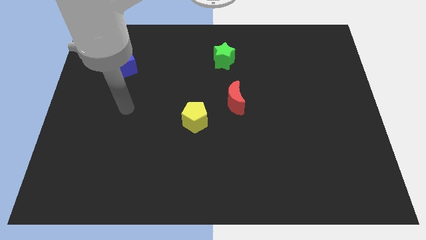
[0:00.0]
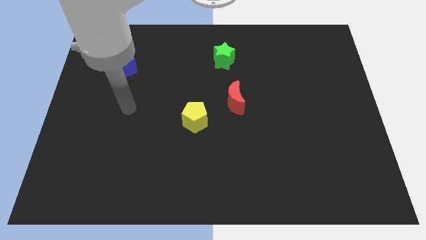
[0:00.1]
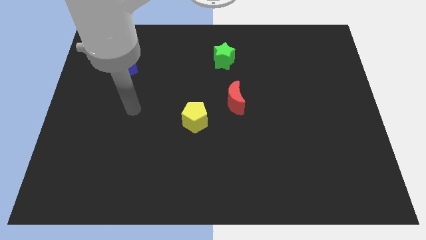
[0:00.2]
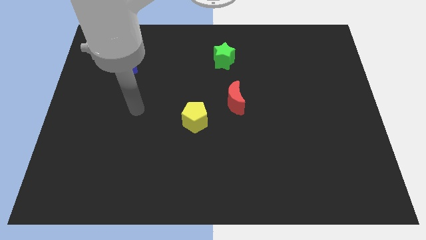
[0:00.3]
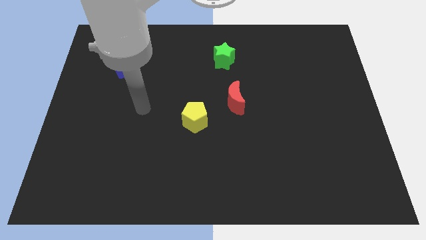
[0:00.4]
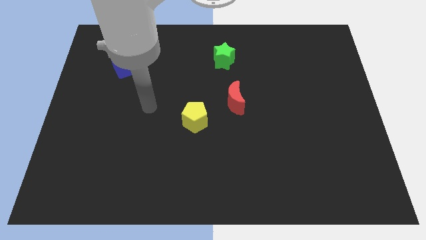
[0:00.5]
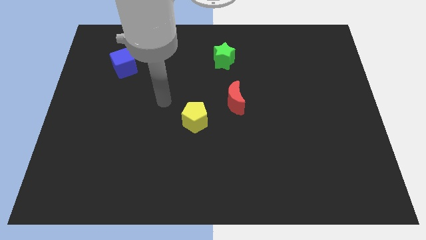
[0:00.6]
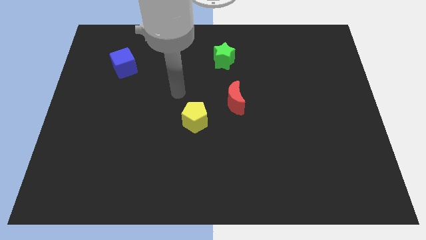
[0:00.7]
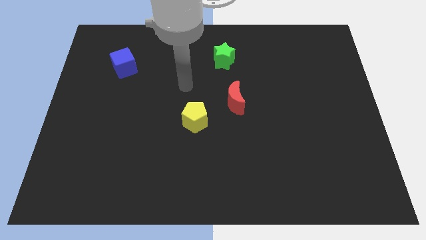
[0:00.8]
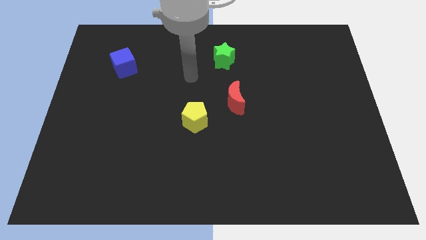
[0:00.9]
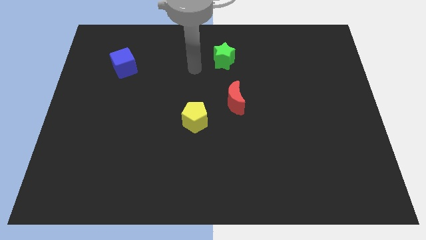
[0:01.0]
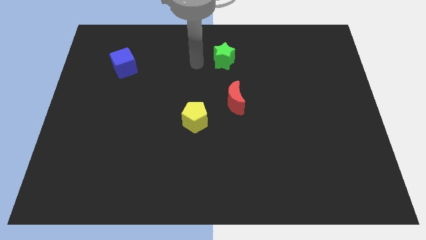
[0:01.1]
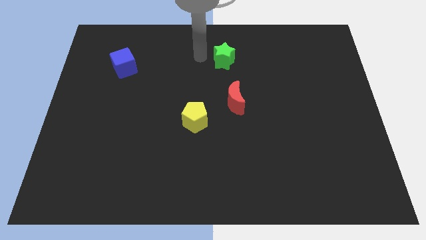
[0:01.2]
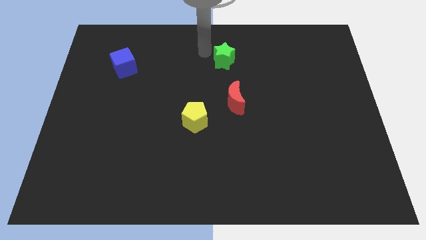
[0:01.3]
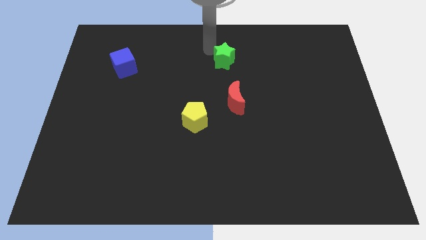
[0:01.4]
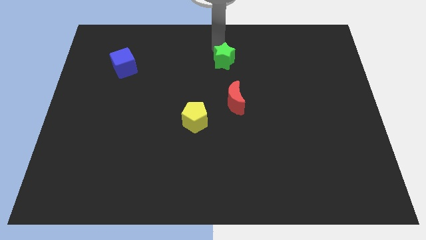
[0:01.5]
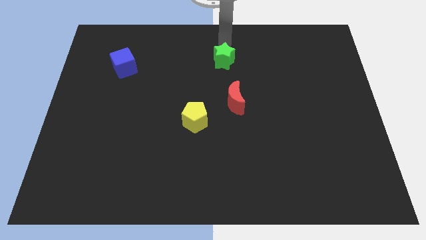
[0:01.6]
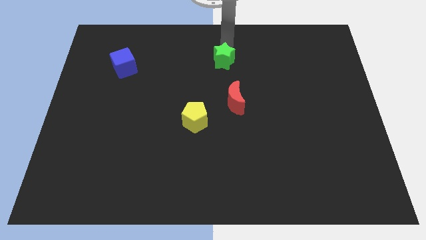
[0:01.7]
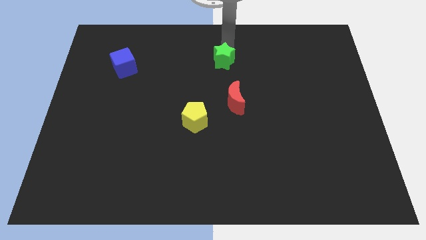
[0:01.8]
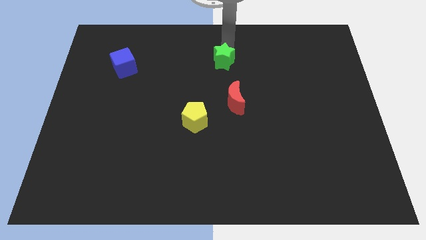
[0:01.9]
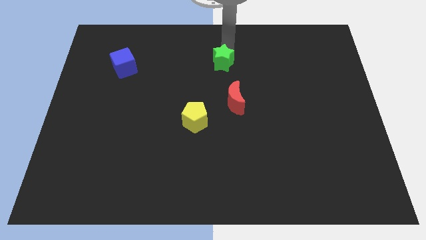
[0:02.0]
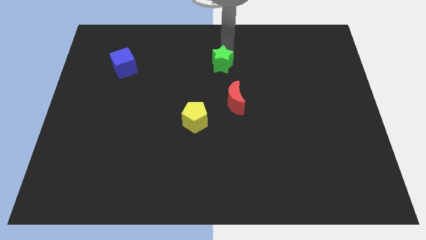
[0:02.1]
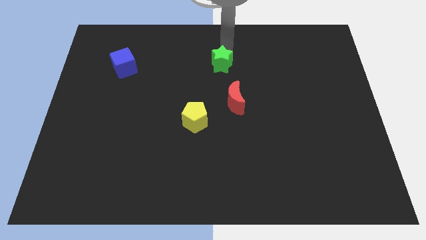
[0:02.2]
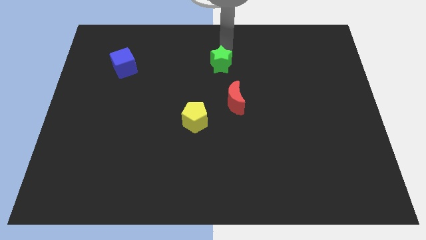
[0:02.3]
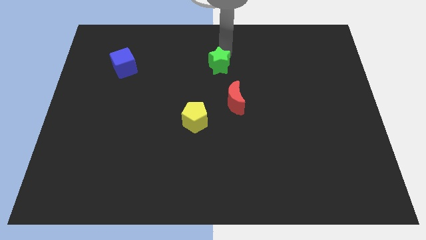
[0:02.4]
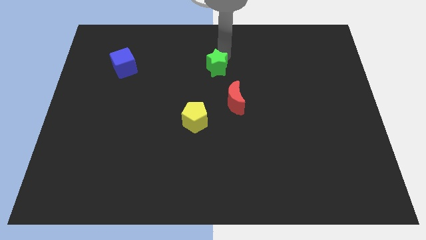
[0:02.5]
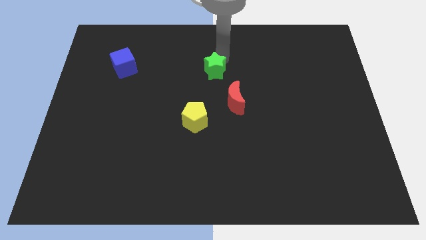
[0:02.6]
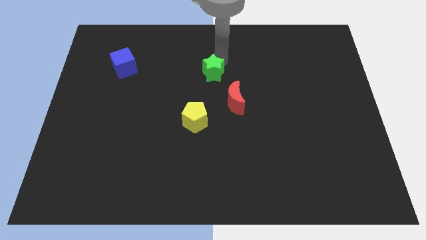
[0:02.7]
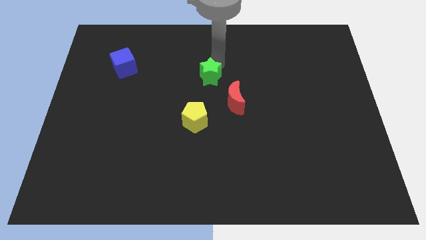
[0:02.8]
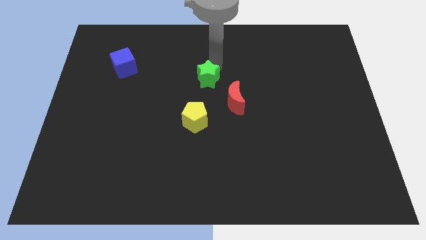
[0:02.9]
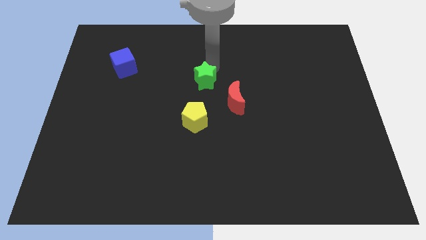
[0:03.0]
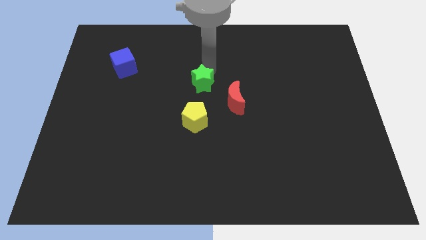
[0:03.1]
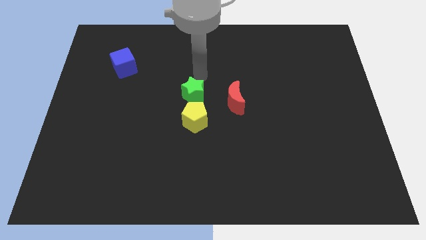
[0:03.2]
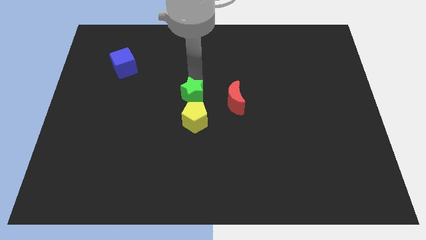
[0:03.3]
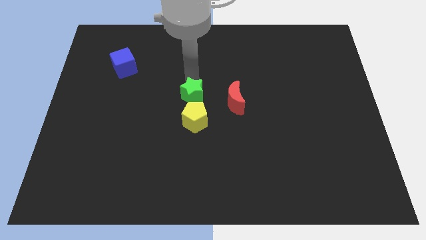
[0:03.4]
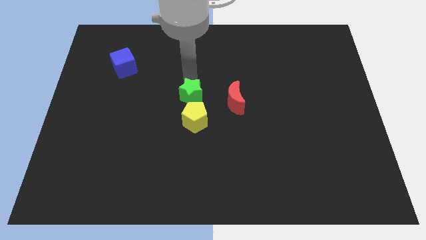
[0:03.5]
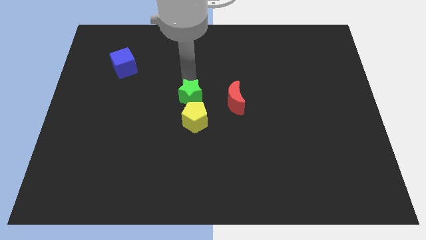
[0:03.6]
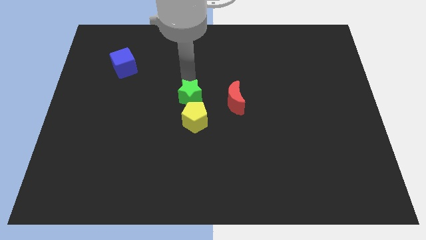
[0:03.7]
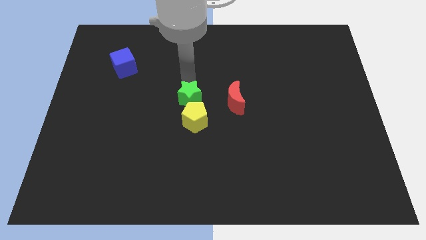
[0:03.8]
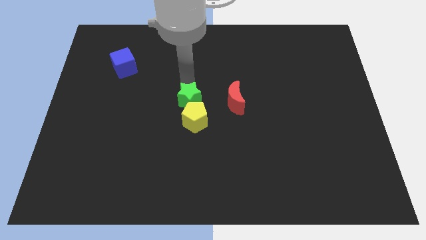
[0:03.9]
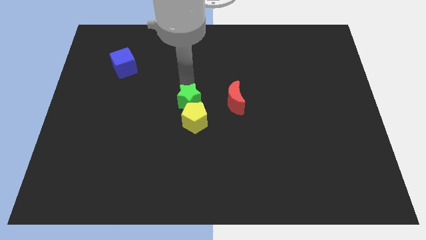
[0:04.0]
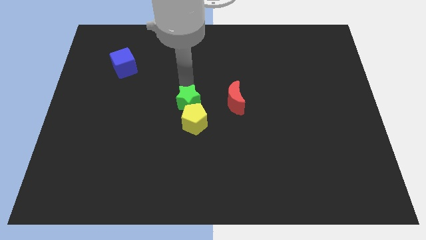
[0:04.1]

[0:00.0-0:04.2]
slide the star to the yellow pentagon

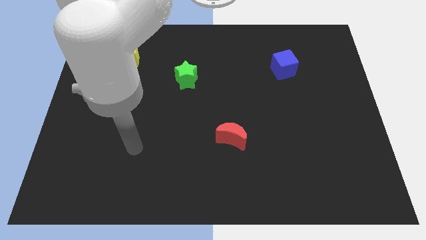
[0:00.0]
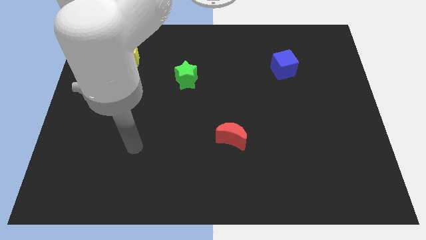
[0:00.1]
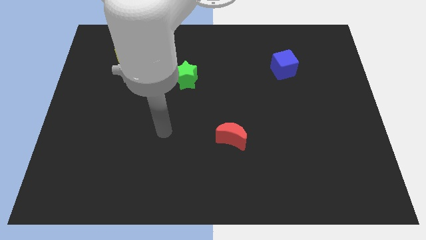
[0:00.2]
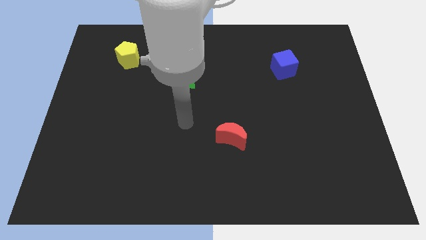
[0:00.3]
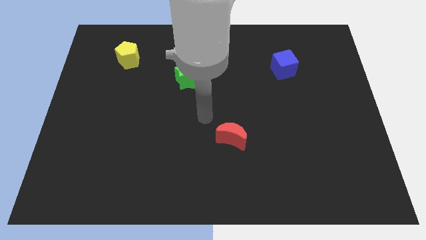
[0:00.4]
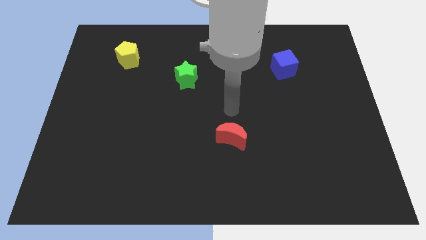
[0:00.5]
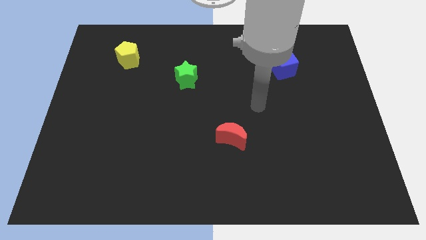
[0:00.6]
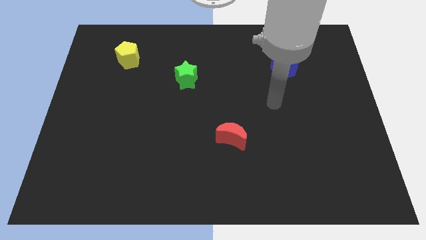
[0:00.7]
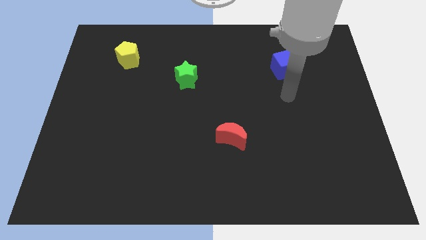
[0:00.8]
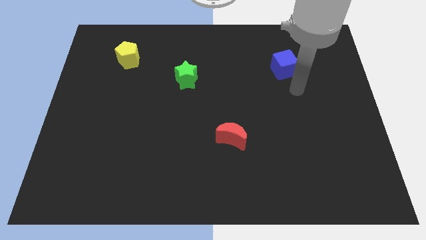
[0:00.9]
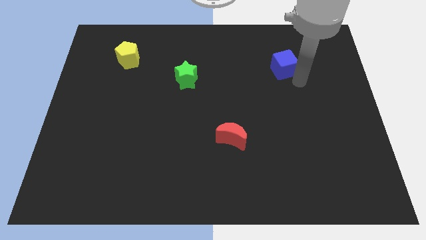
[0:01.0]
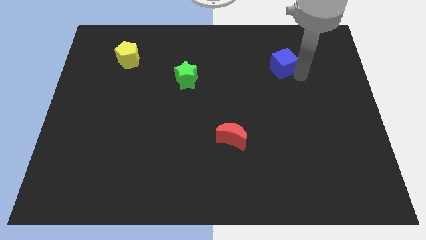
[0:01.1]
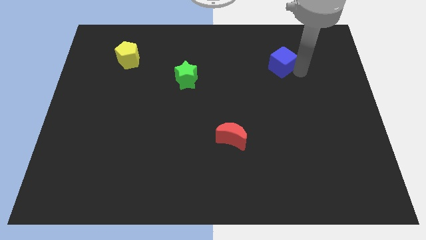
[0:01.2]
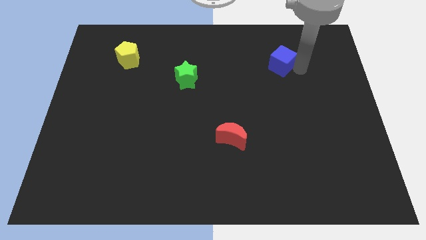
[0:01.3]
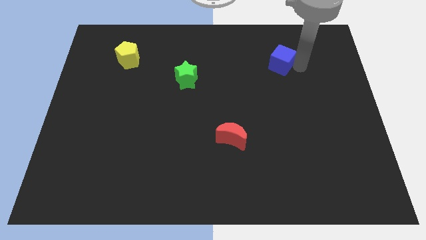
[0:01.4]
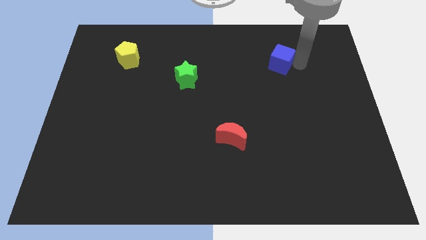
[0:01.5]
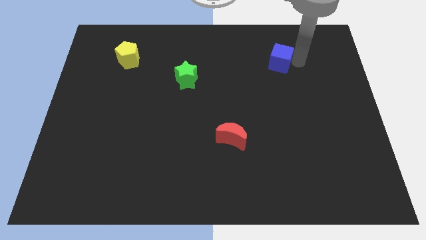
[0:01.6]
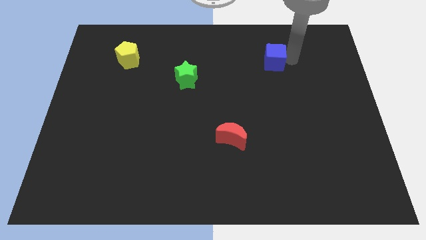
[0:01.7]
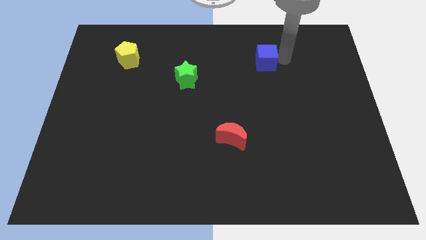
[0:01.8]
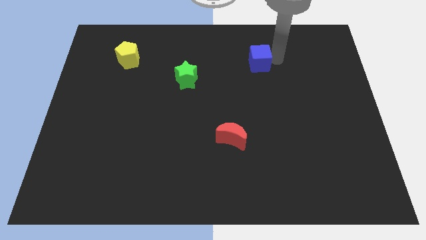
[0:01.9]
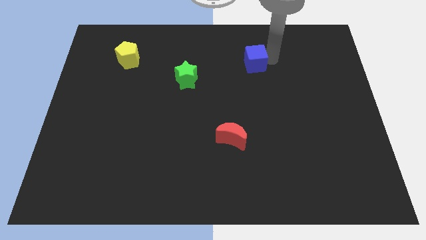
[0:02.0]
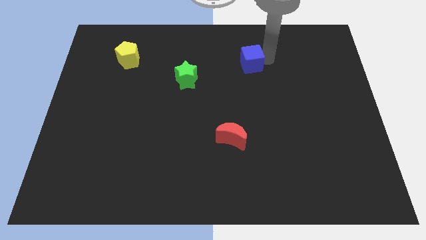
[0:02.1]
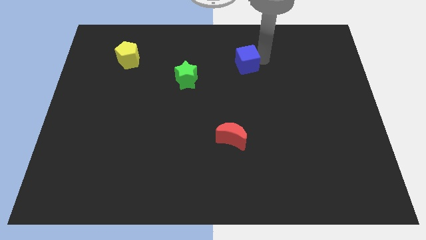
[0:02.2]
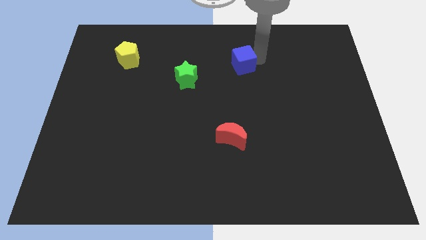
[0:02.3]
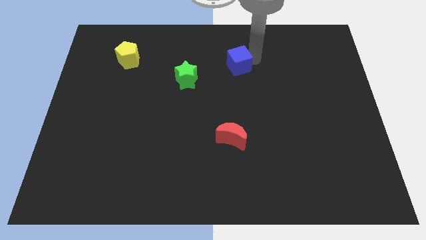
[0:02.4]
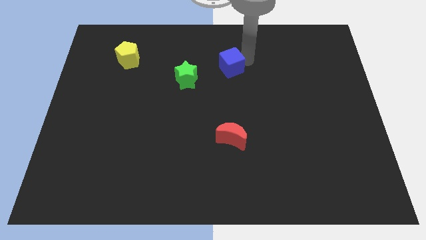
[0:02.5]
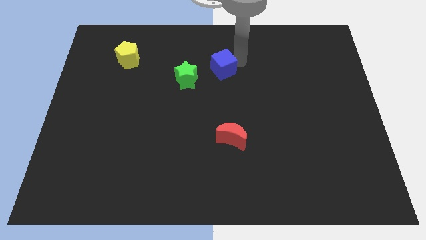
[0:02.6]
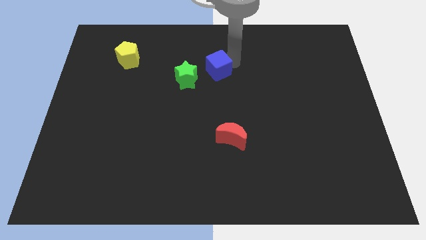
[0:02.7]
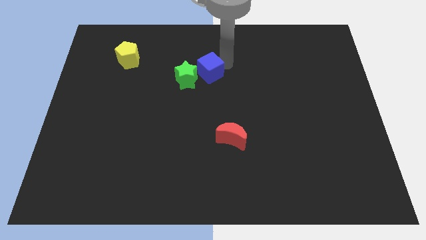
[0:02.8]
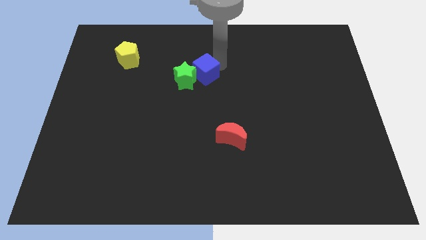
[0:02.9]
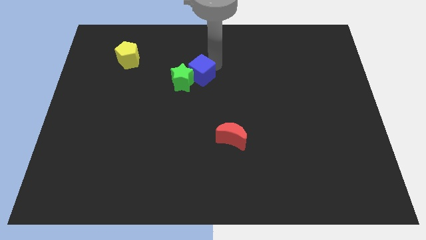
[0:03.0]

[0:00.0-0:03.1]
slide the blue cube to the star

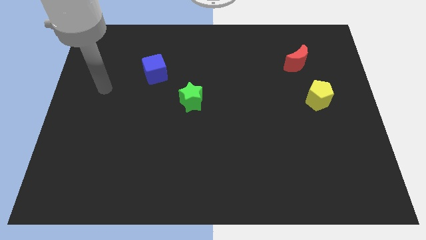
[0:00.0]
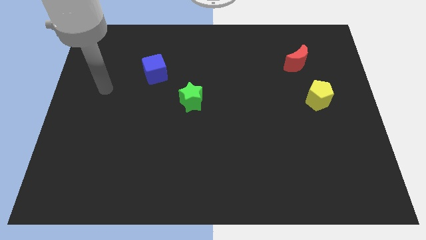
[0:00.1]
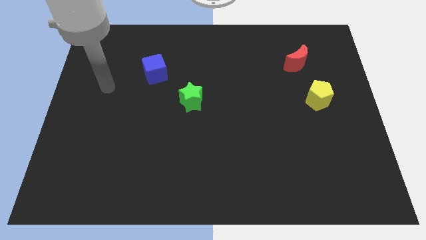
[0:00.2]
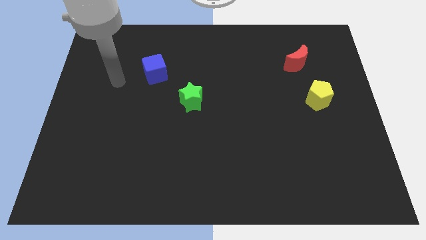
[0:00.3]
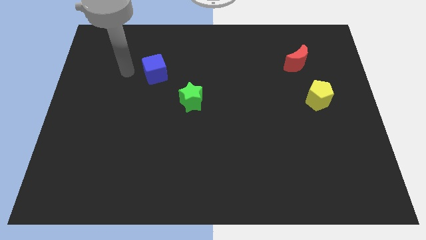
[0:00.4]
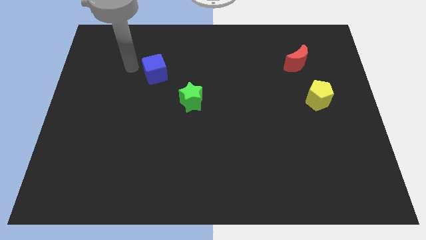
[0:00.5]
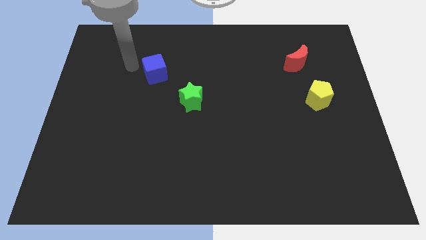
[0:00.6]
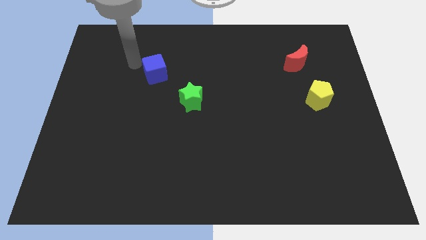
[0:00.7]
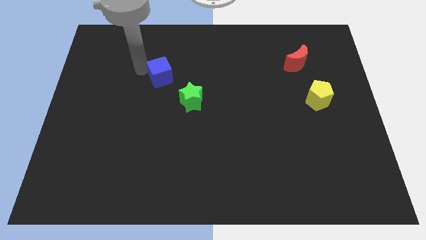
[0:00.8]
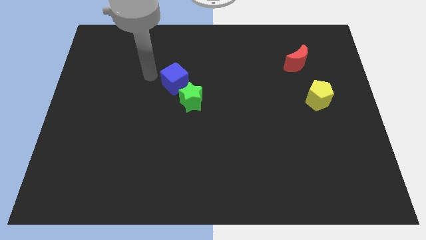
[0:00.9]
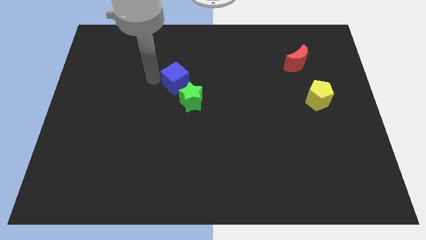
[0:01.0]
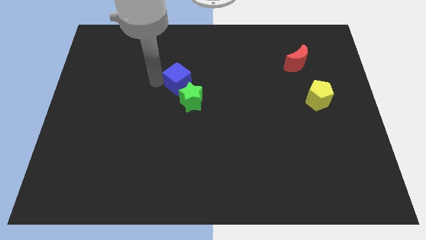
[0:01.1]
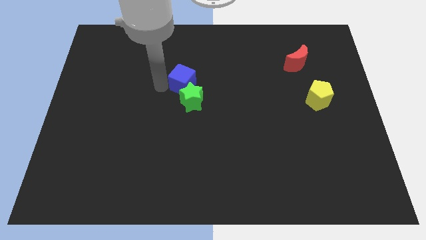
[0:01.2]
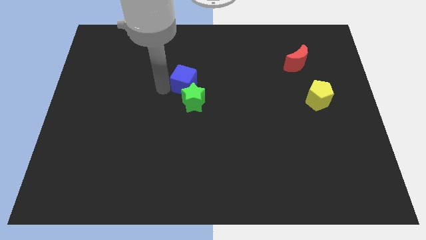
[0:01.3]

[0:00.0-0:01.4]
put the blue block to the green block

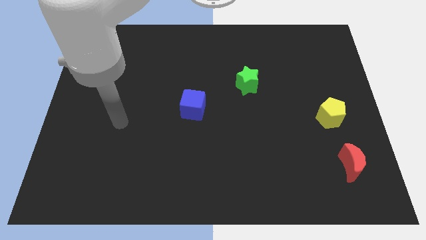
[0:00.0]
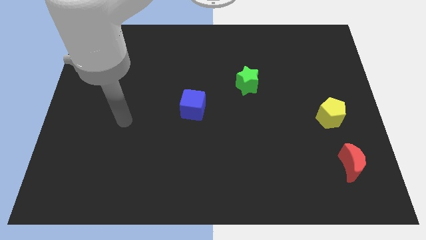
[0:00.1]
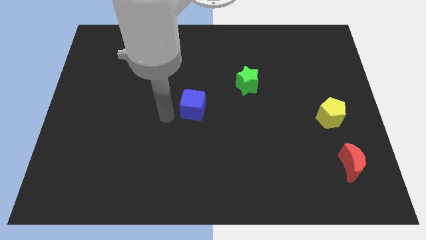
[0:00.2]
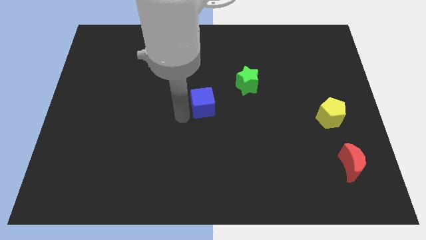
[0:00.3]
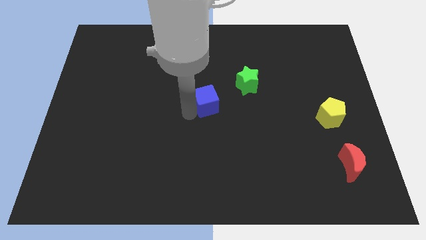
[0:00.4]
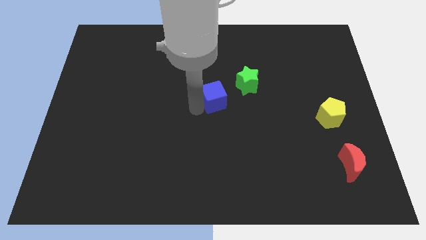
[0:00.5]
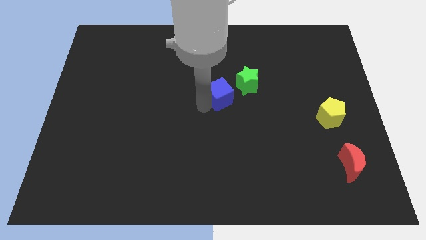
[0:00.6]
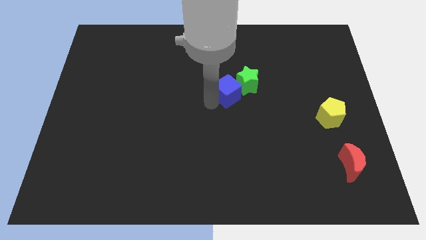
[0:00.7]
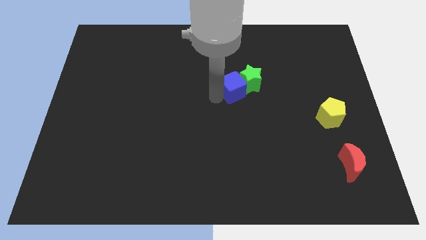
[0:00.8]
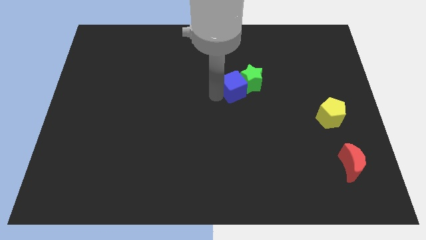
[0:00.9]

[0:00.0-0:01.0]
put the blue cube next to the green block
